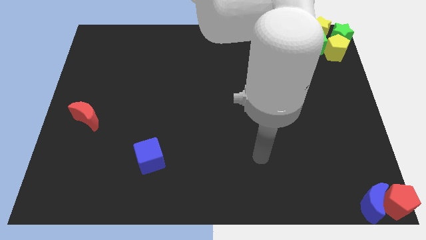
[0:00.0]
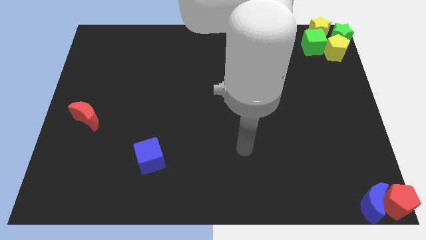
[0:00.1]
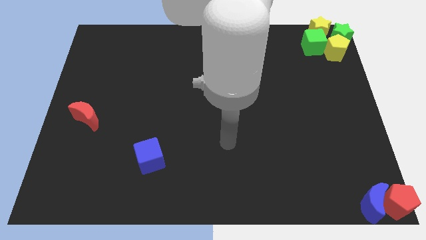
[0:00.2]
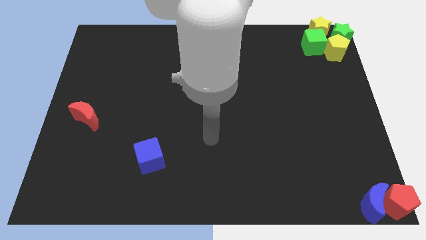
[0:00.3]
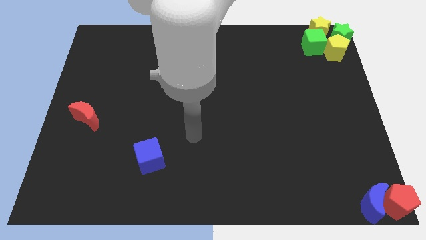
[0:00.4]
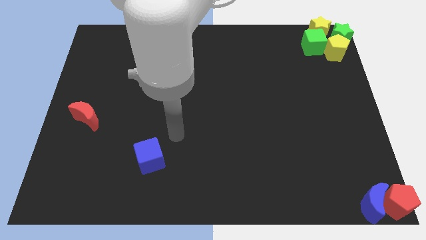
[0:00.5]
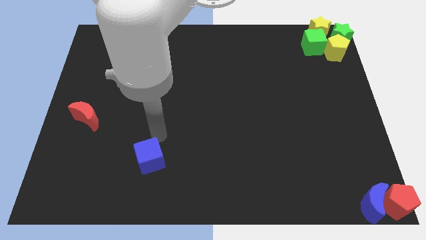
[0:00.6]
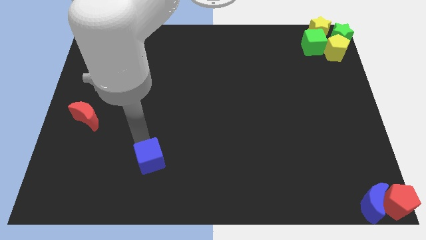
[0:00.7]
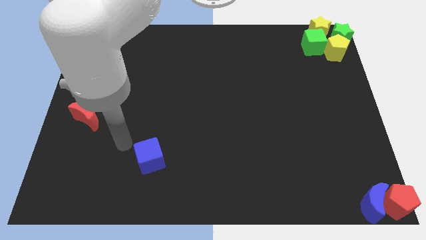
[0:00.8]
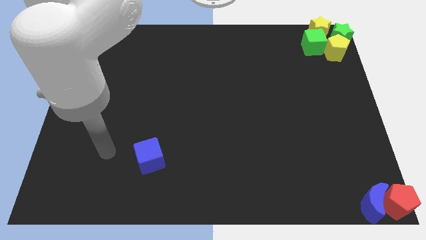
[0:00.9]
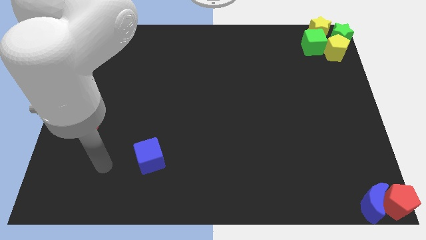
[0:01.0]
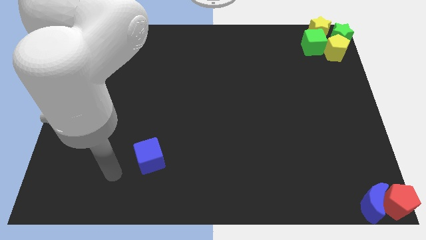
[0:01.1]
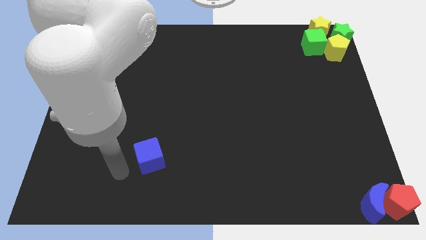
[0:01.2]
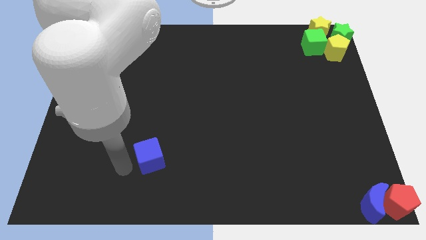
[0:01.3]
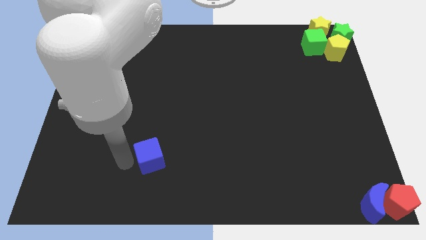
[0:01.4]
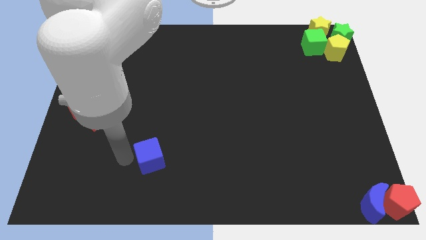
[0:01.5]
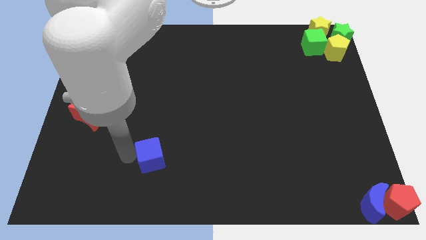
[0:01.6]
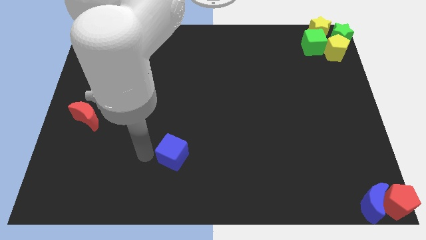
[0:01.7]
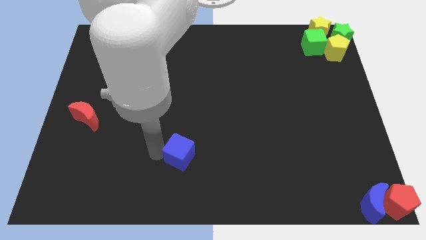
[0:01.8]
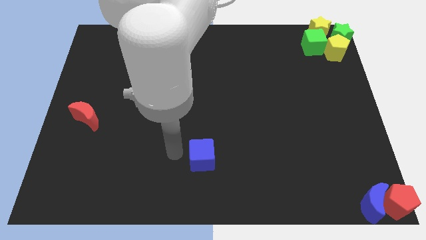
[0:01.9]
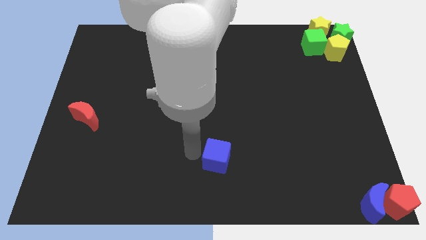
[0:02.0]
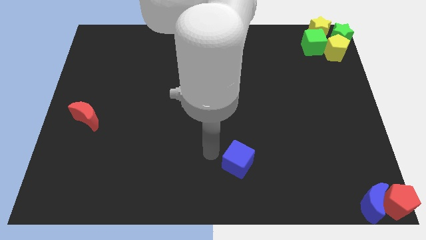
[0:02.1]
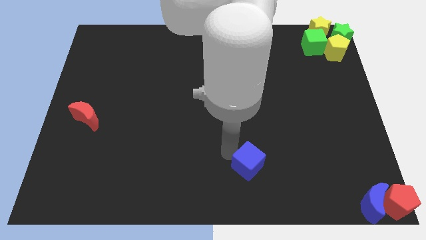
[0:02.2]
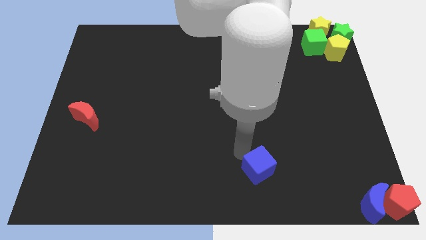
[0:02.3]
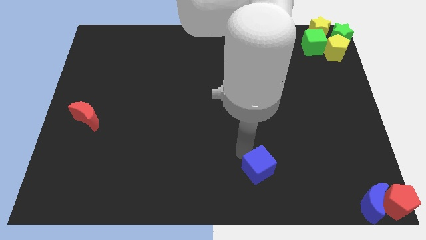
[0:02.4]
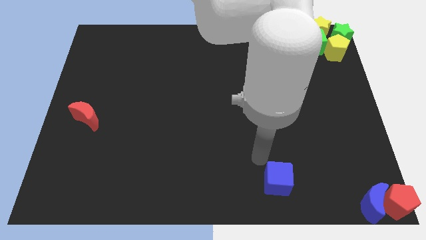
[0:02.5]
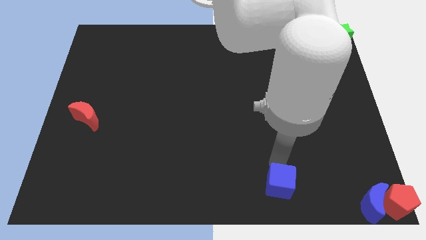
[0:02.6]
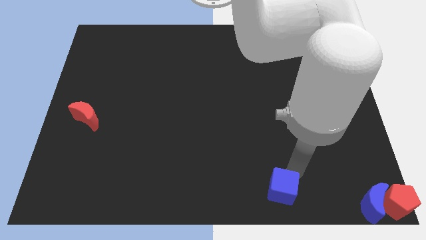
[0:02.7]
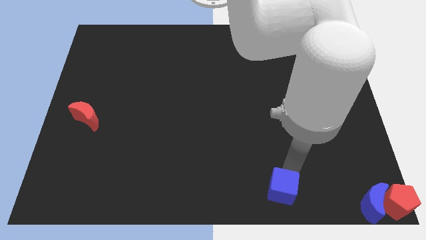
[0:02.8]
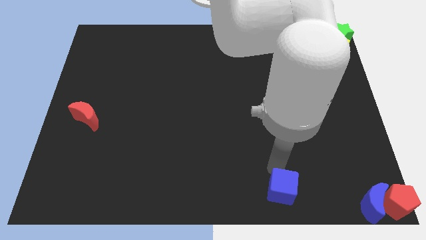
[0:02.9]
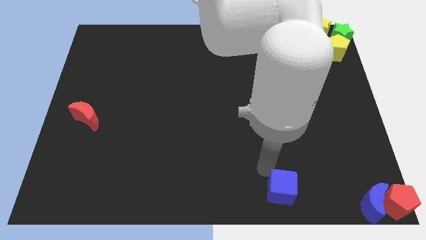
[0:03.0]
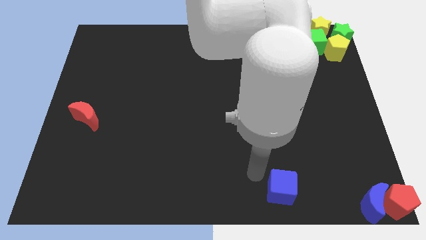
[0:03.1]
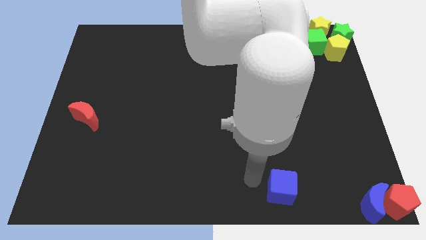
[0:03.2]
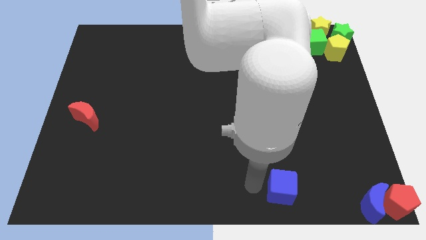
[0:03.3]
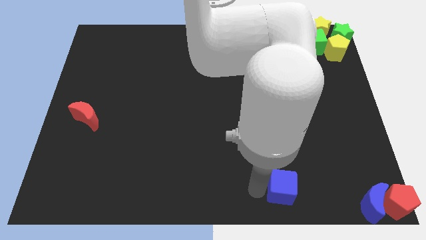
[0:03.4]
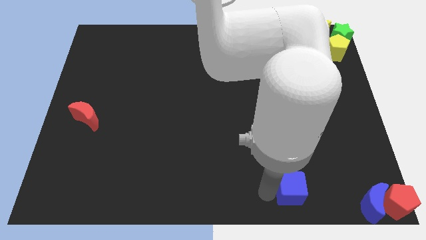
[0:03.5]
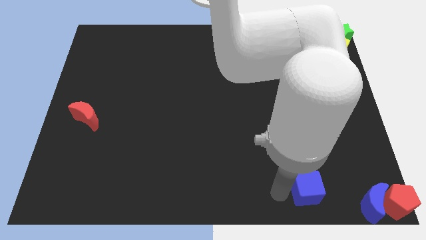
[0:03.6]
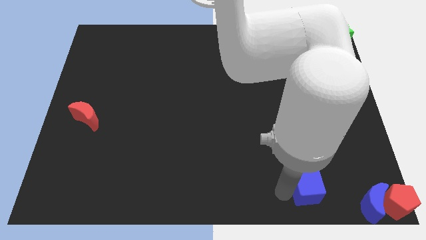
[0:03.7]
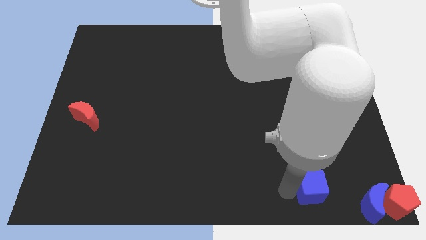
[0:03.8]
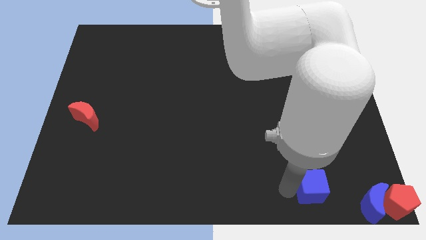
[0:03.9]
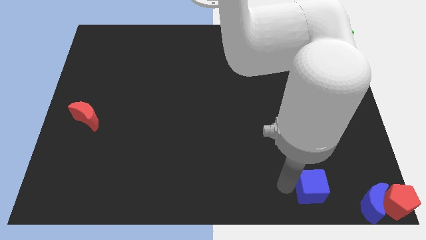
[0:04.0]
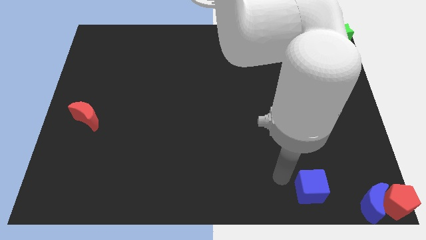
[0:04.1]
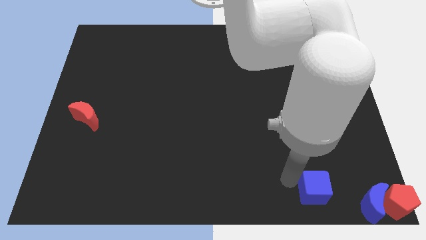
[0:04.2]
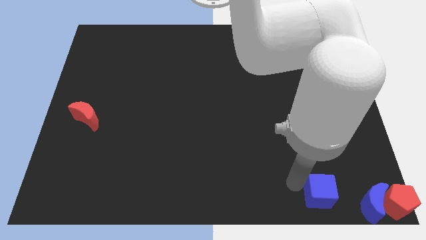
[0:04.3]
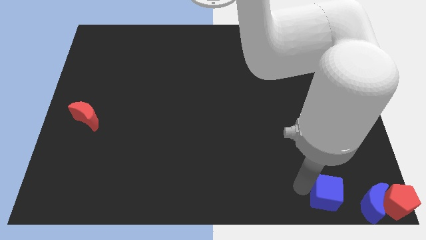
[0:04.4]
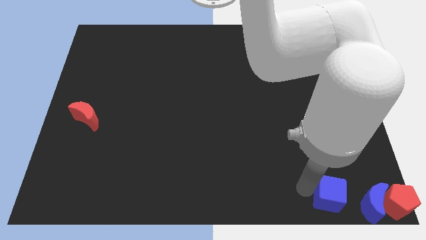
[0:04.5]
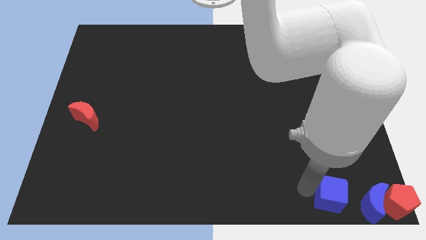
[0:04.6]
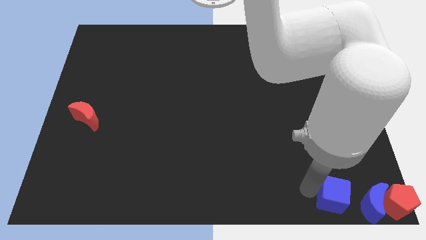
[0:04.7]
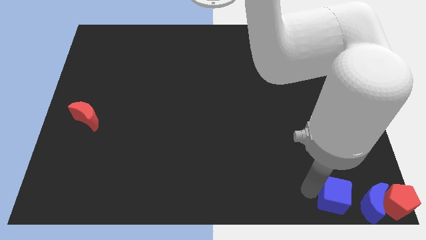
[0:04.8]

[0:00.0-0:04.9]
push the blue cube to the left of the blue crescent

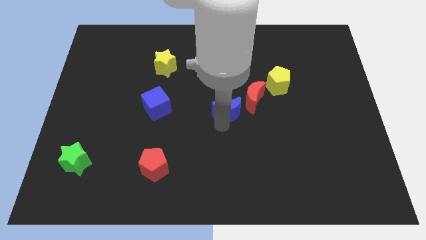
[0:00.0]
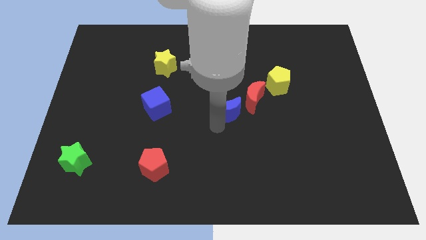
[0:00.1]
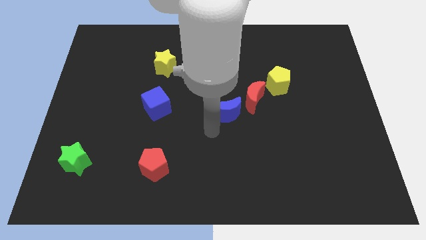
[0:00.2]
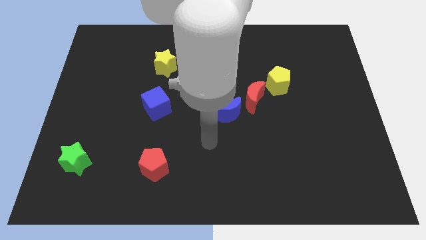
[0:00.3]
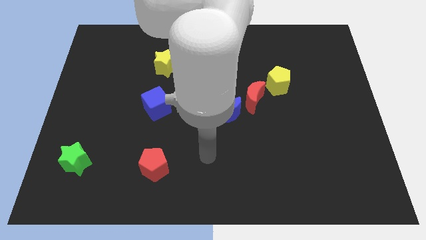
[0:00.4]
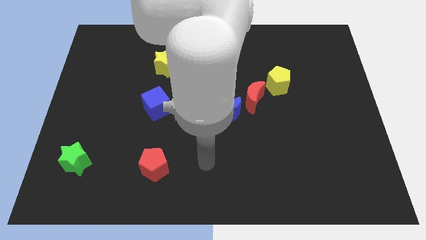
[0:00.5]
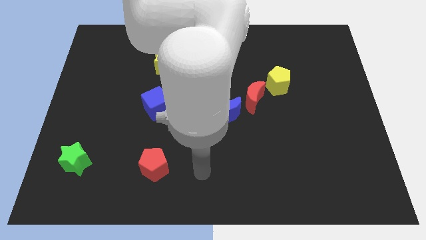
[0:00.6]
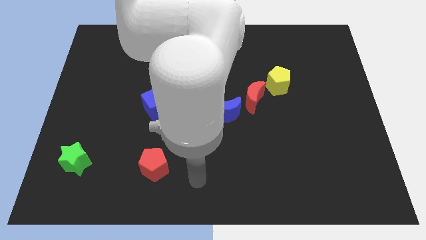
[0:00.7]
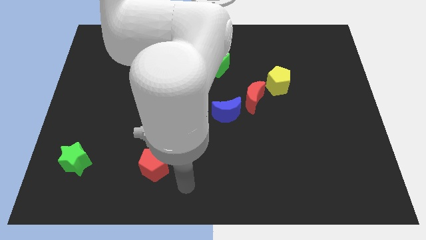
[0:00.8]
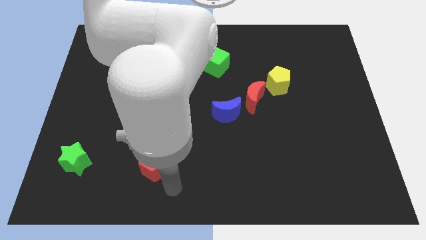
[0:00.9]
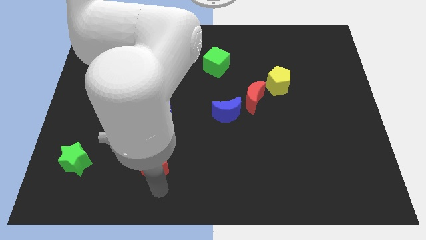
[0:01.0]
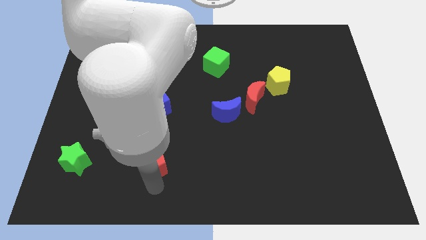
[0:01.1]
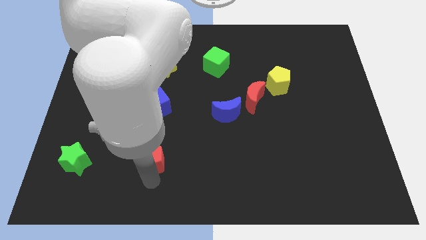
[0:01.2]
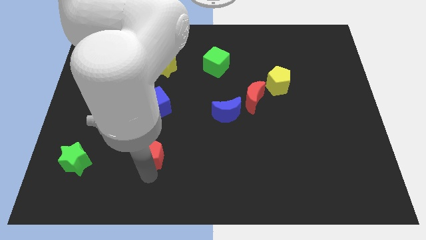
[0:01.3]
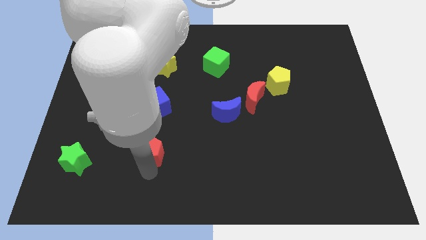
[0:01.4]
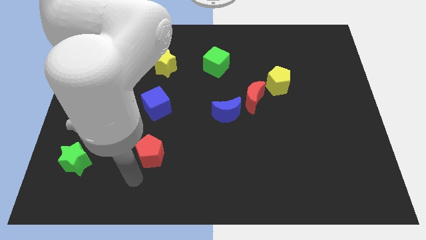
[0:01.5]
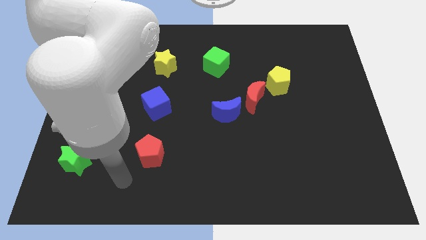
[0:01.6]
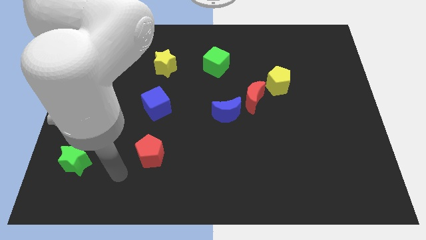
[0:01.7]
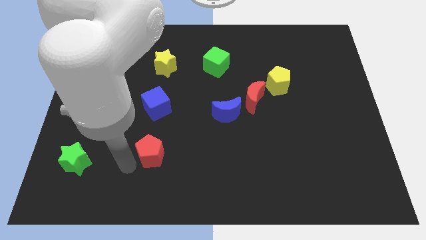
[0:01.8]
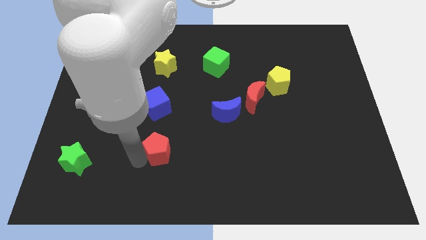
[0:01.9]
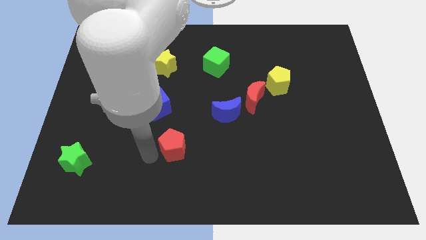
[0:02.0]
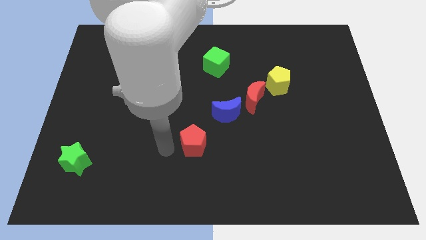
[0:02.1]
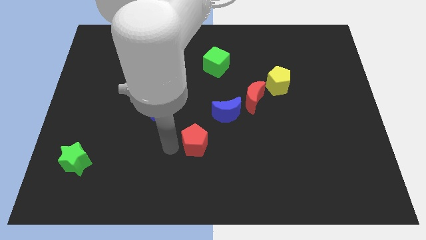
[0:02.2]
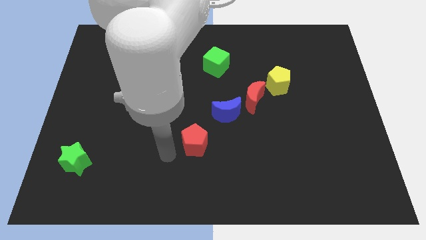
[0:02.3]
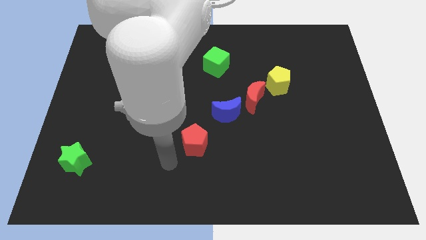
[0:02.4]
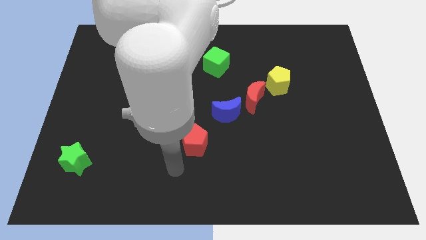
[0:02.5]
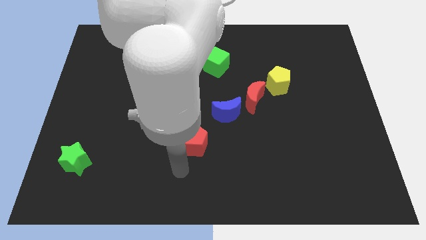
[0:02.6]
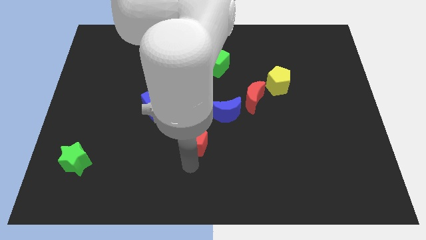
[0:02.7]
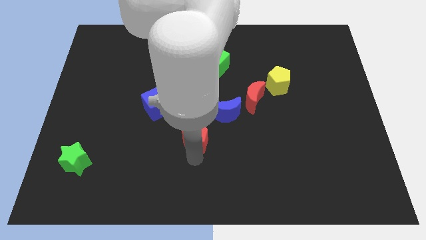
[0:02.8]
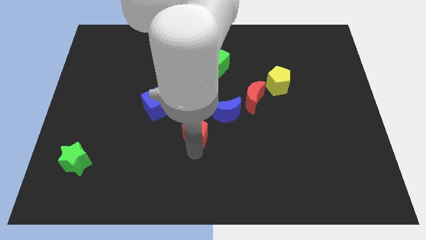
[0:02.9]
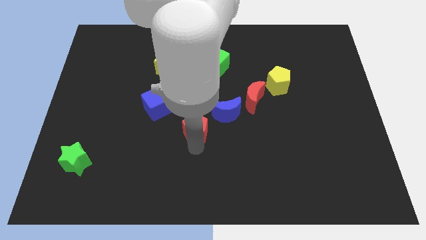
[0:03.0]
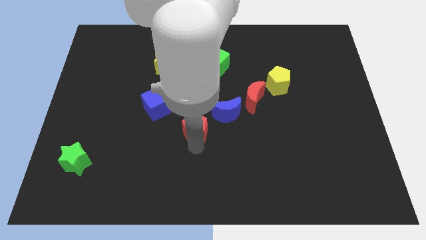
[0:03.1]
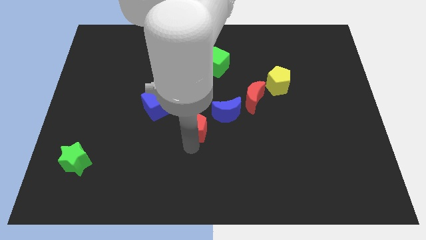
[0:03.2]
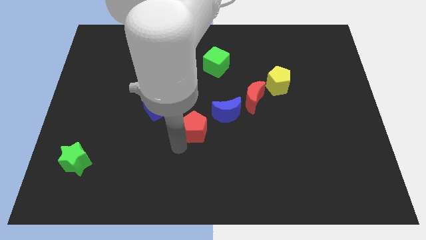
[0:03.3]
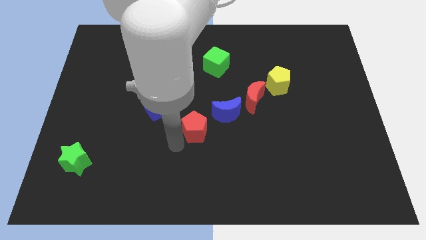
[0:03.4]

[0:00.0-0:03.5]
move the red pentagon towards the center of the board

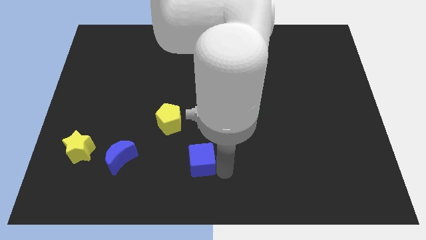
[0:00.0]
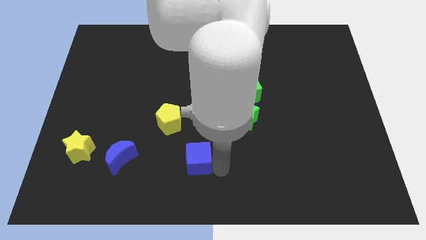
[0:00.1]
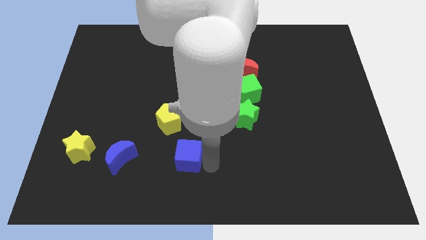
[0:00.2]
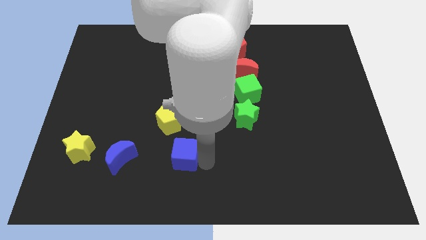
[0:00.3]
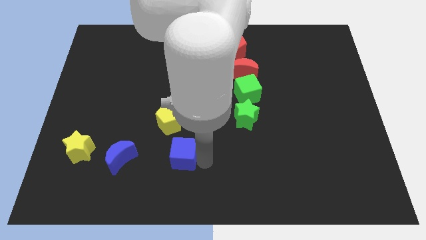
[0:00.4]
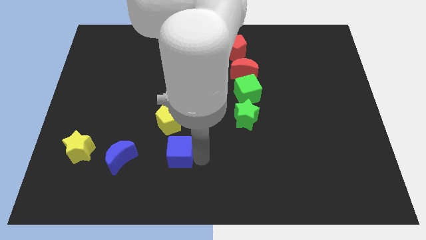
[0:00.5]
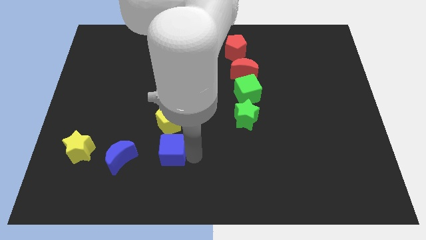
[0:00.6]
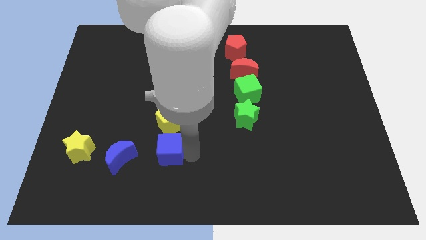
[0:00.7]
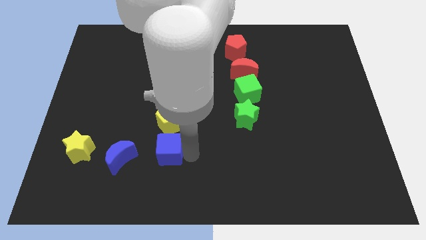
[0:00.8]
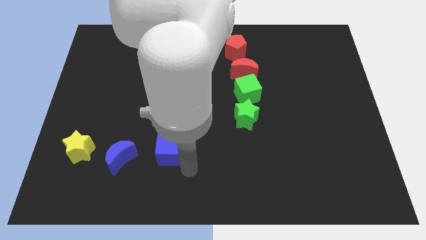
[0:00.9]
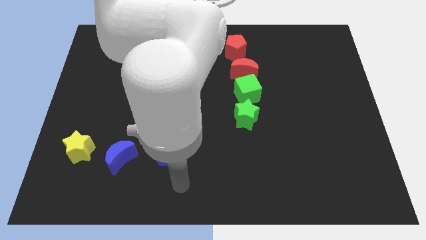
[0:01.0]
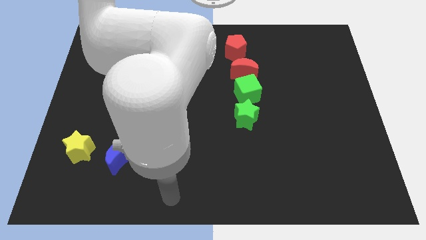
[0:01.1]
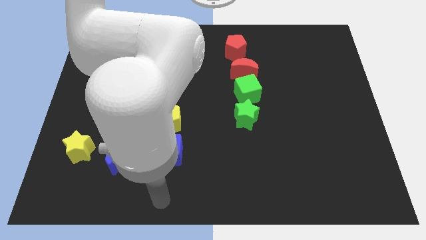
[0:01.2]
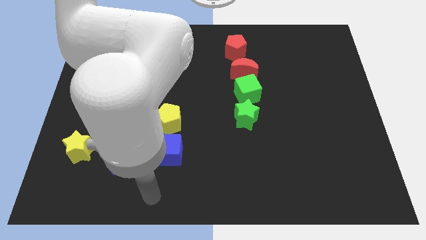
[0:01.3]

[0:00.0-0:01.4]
move the blue cube slightly to the left
